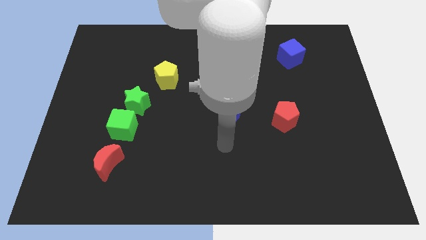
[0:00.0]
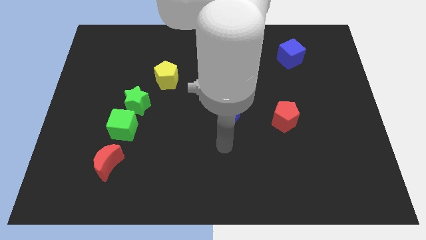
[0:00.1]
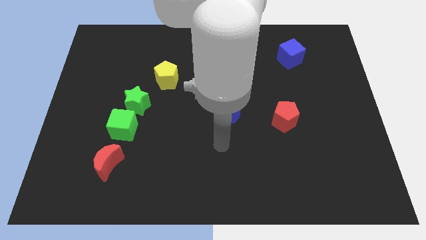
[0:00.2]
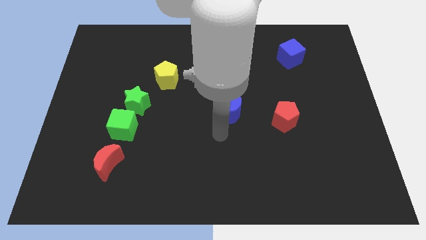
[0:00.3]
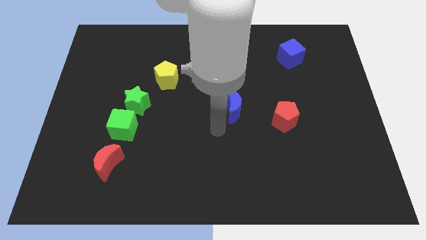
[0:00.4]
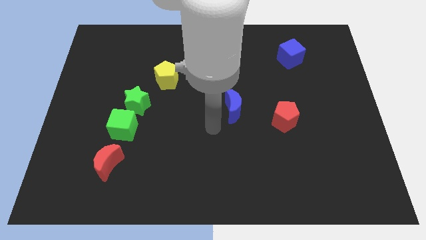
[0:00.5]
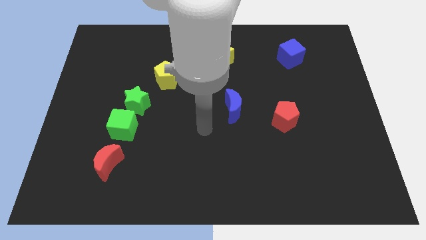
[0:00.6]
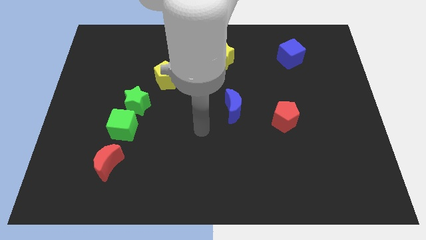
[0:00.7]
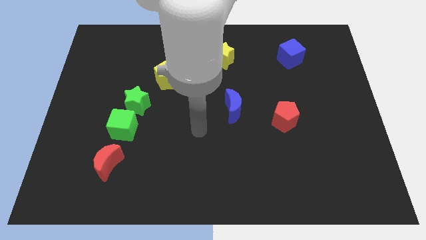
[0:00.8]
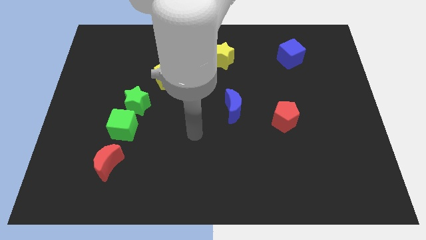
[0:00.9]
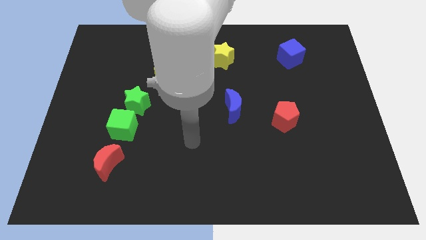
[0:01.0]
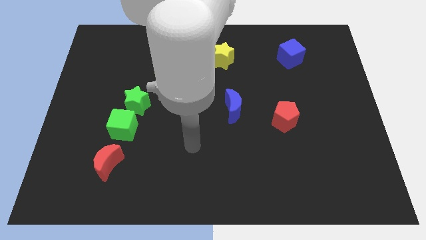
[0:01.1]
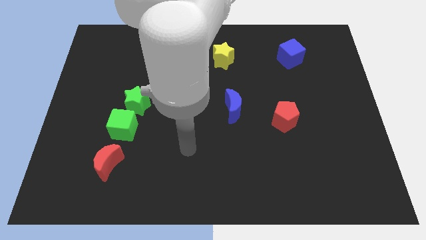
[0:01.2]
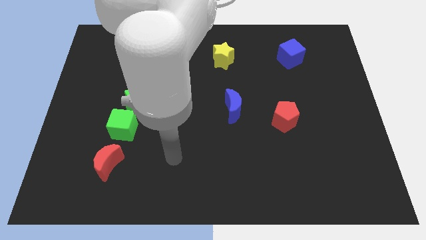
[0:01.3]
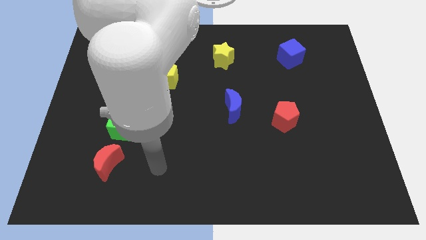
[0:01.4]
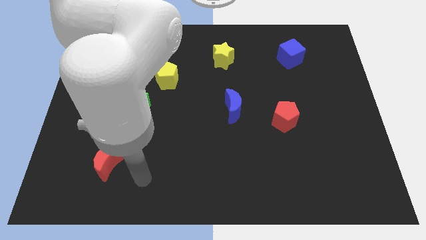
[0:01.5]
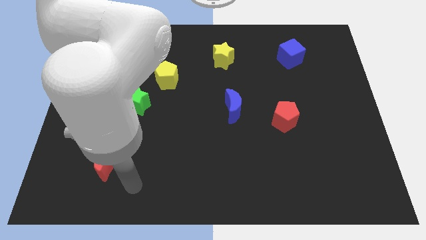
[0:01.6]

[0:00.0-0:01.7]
move your hand towards the bottom left

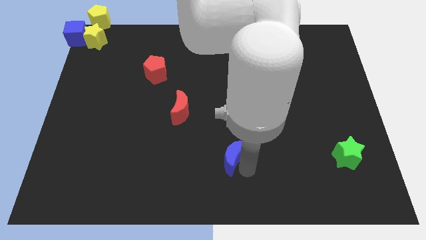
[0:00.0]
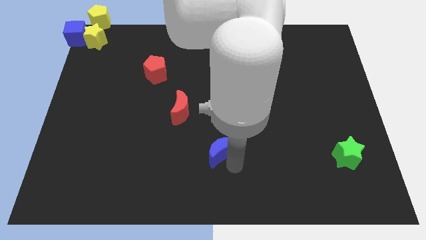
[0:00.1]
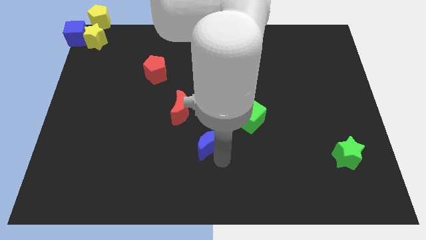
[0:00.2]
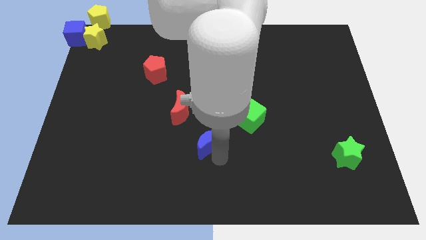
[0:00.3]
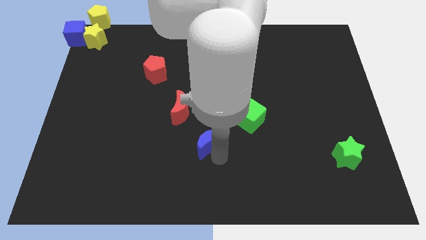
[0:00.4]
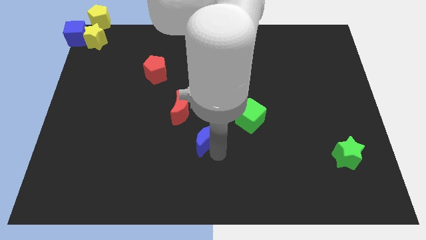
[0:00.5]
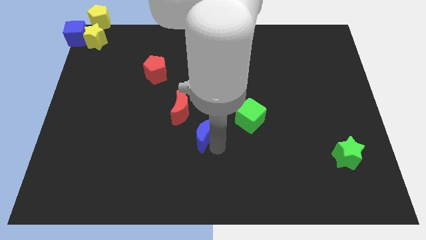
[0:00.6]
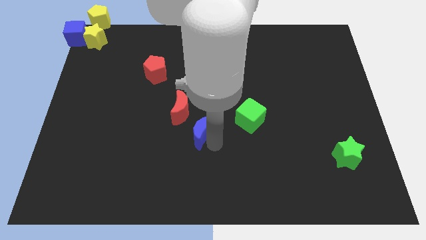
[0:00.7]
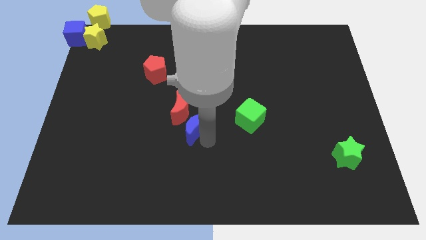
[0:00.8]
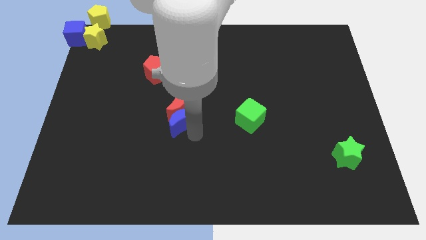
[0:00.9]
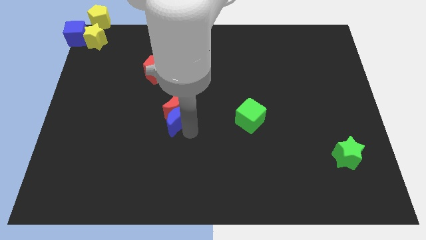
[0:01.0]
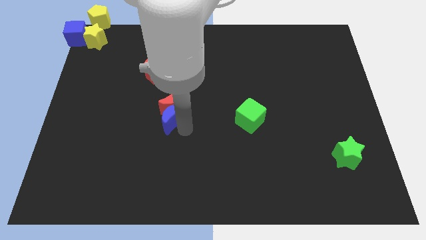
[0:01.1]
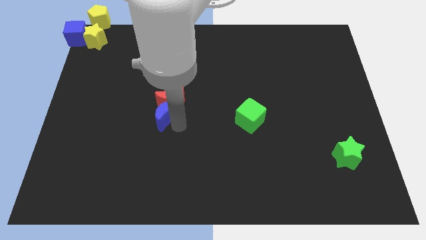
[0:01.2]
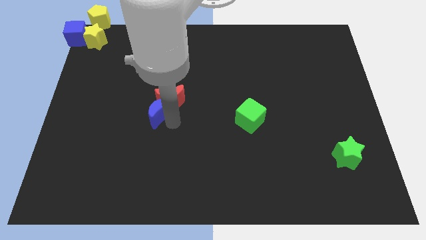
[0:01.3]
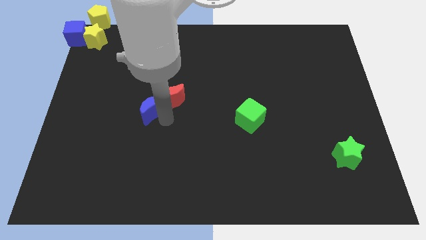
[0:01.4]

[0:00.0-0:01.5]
move blue moon into red moon

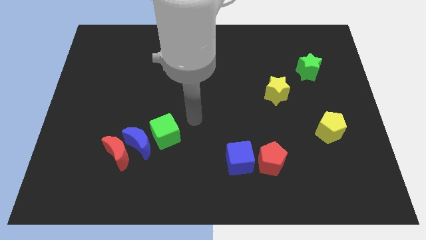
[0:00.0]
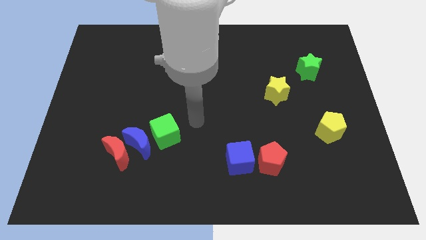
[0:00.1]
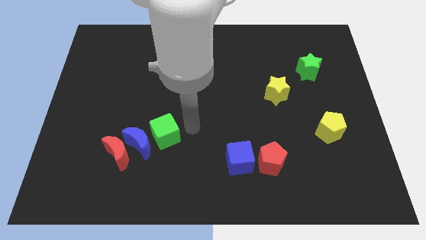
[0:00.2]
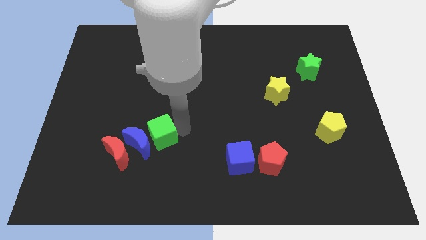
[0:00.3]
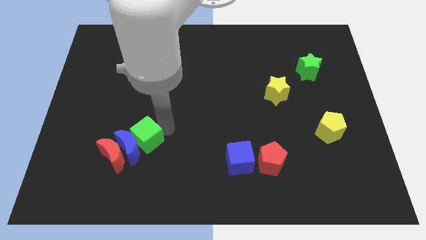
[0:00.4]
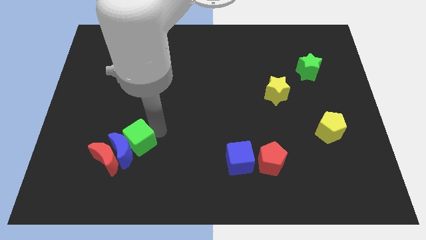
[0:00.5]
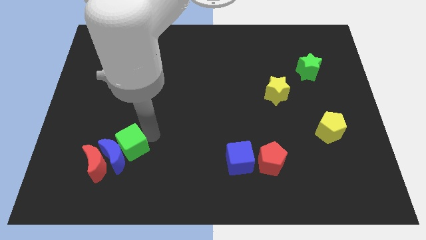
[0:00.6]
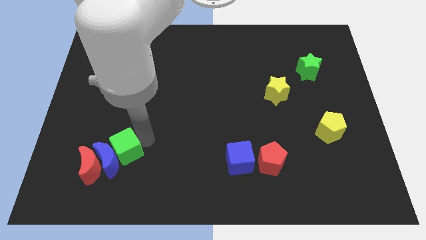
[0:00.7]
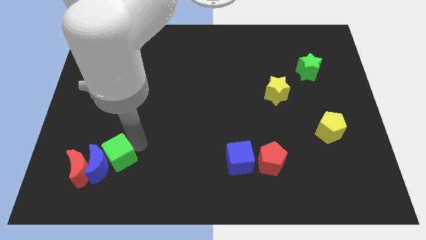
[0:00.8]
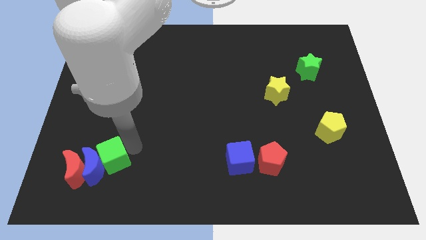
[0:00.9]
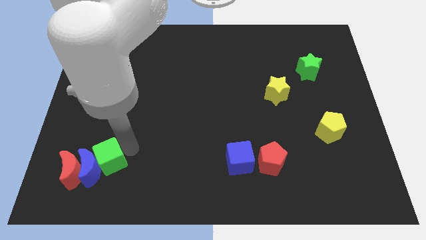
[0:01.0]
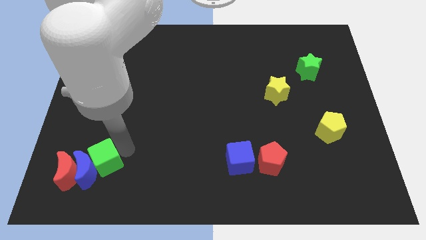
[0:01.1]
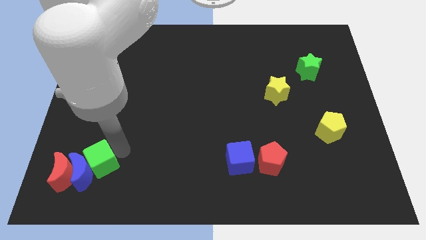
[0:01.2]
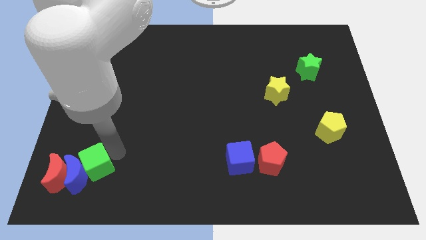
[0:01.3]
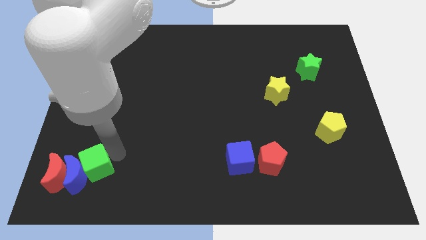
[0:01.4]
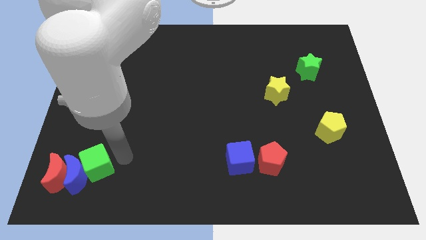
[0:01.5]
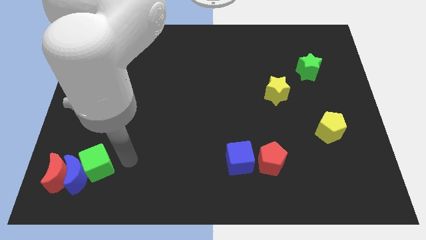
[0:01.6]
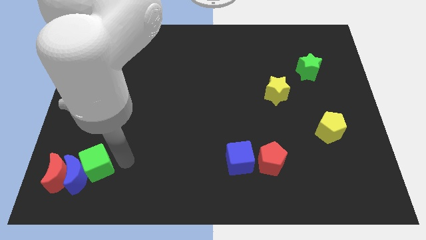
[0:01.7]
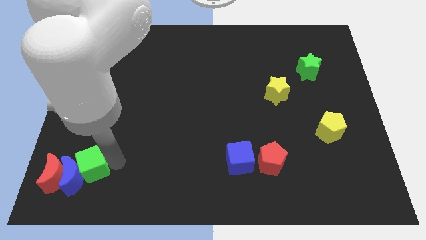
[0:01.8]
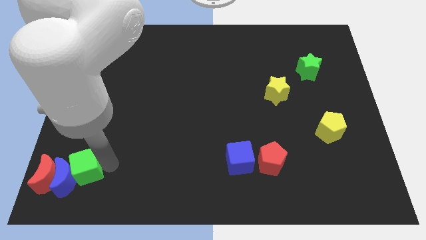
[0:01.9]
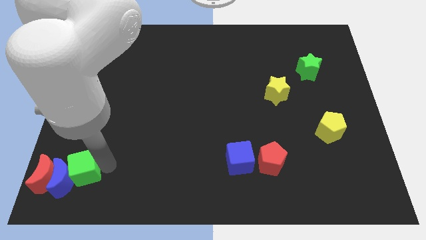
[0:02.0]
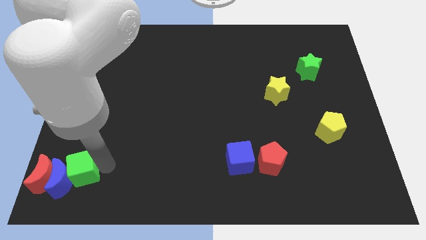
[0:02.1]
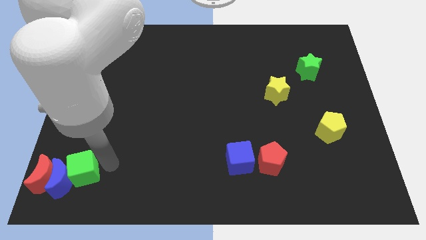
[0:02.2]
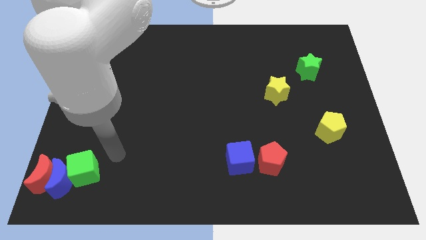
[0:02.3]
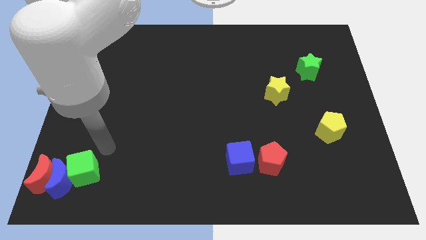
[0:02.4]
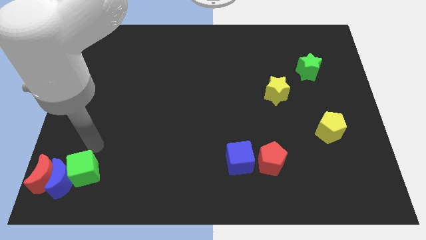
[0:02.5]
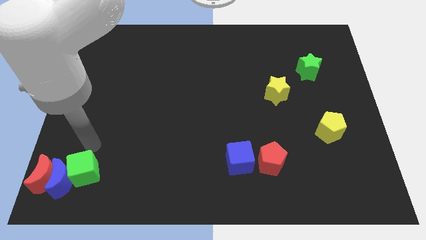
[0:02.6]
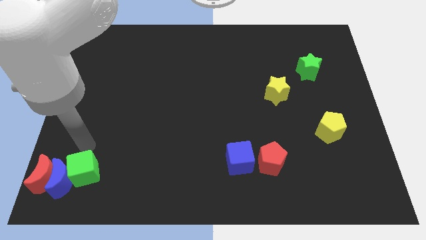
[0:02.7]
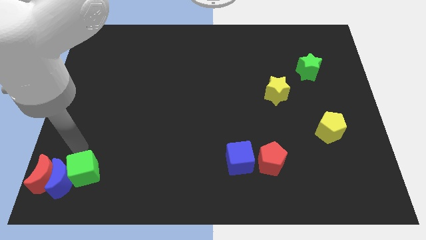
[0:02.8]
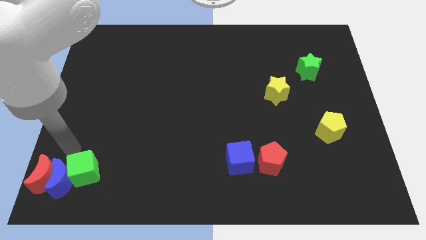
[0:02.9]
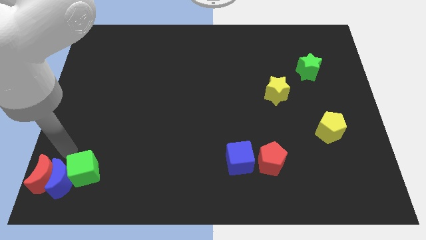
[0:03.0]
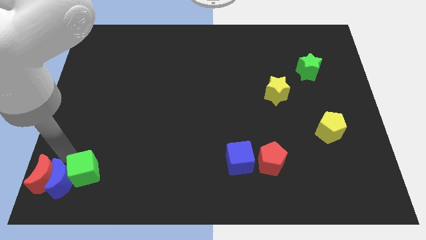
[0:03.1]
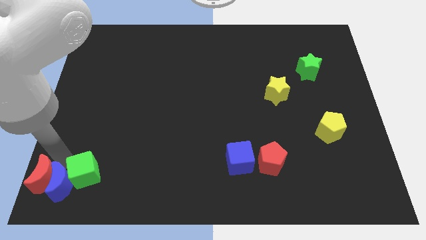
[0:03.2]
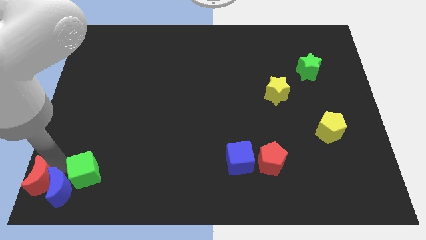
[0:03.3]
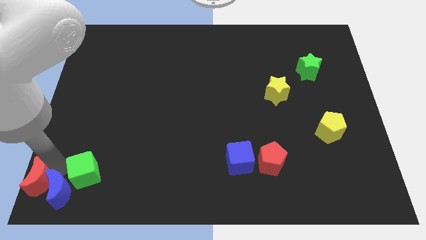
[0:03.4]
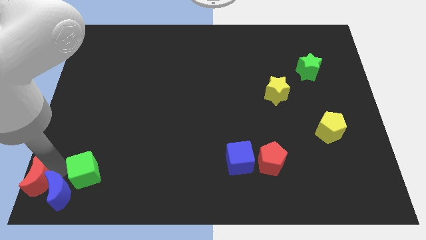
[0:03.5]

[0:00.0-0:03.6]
move the green cube along with the red crescent and blue crescent towards the bottom left corner

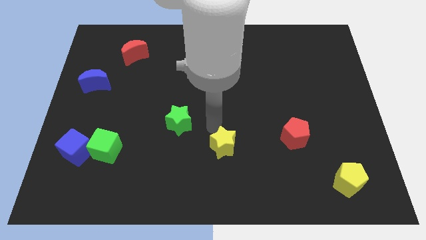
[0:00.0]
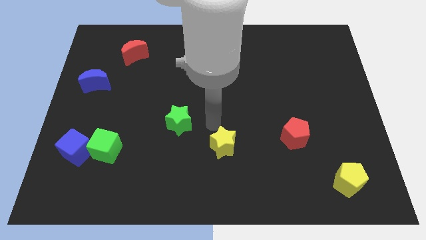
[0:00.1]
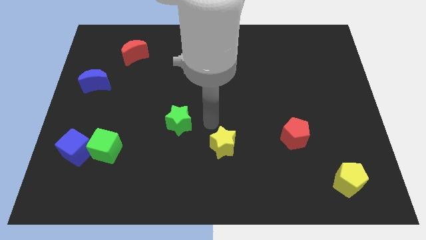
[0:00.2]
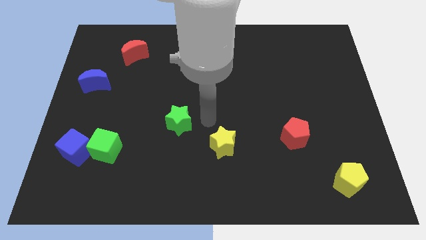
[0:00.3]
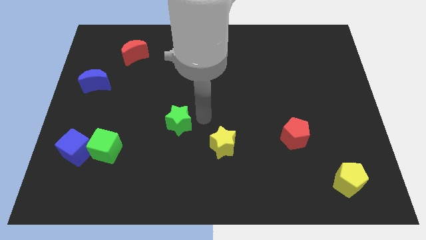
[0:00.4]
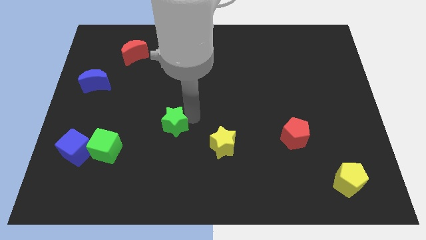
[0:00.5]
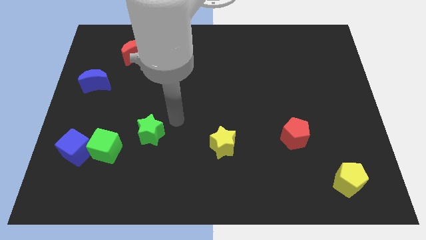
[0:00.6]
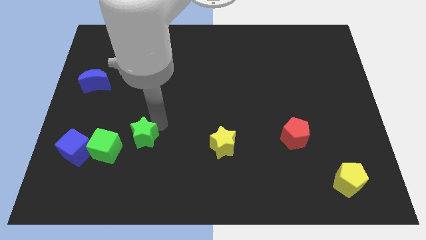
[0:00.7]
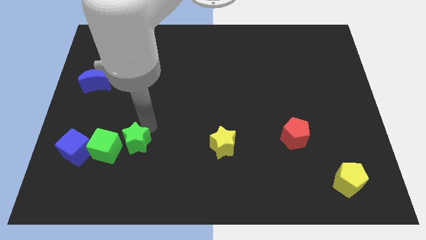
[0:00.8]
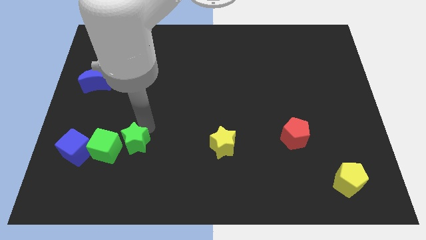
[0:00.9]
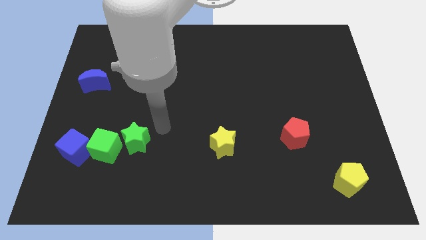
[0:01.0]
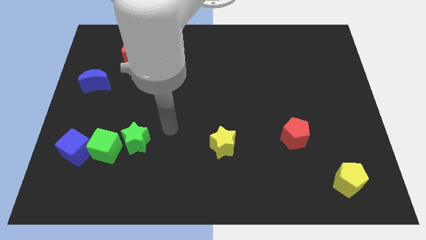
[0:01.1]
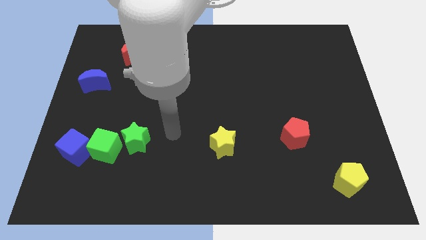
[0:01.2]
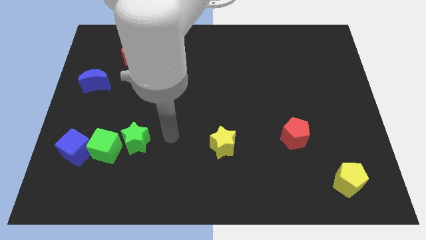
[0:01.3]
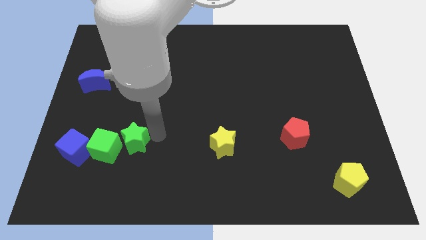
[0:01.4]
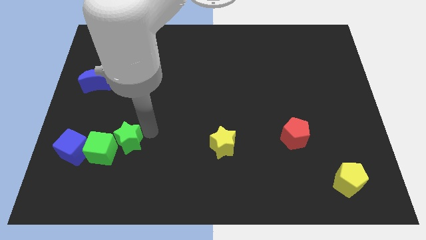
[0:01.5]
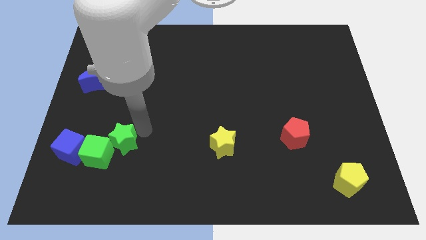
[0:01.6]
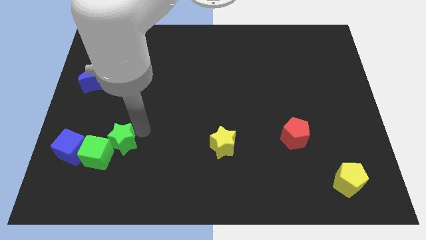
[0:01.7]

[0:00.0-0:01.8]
place the green star into green cube on top

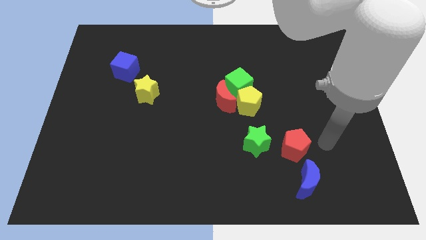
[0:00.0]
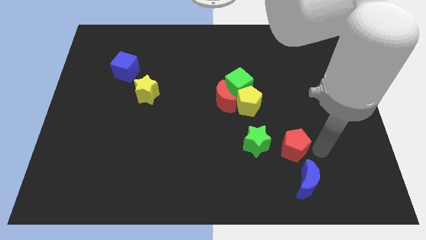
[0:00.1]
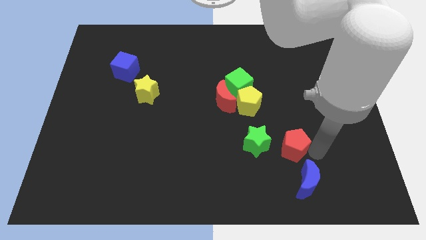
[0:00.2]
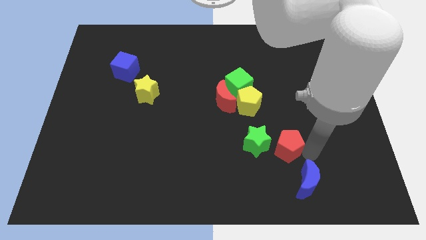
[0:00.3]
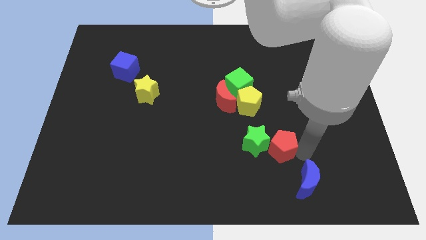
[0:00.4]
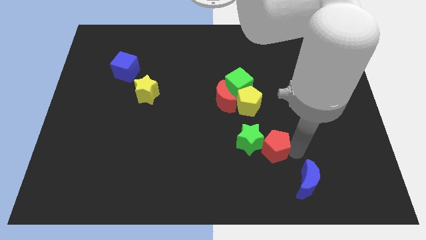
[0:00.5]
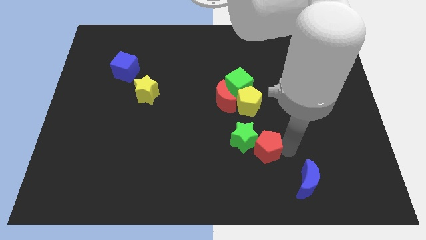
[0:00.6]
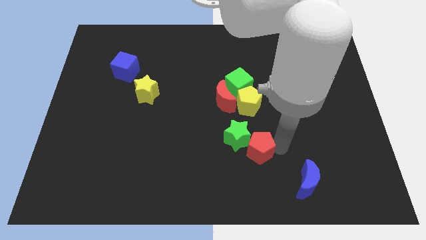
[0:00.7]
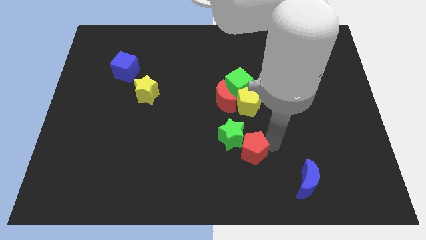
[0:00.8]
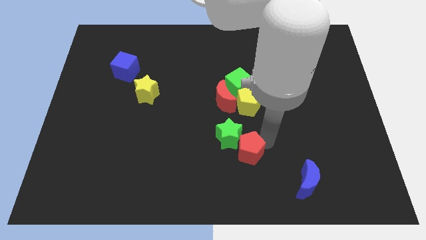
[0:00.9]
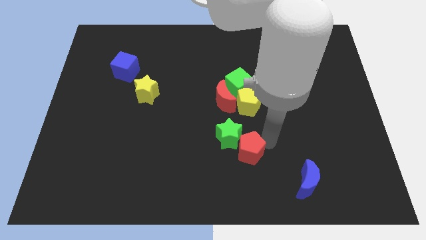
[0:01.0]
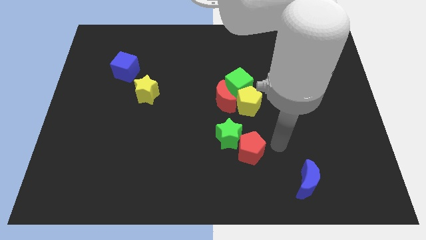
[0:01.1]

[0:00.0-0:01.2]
place red pentagon to the bottom of yellow pentagon
